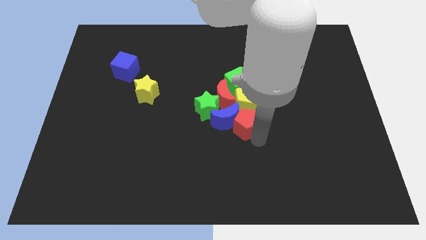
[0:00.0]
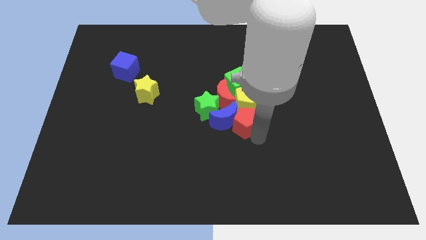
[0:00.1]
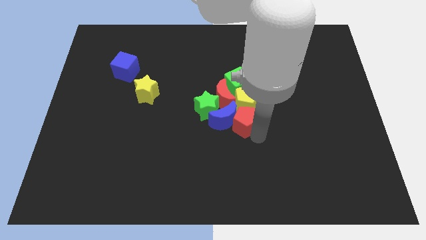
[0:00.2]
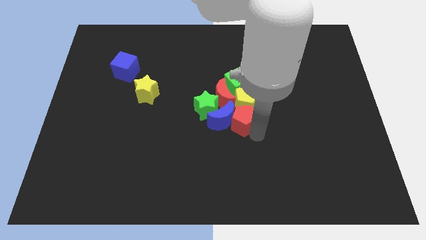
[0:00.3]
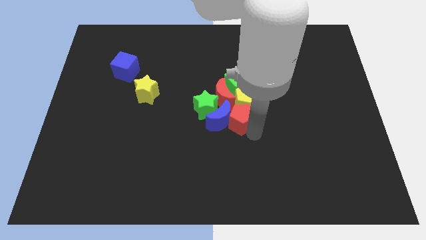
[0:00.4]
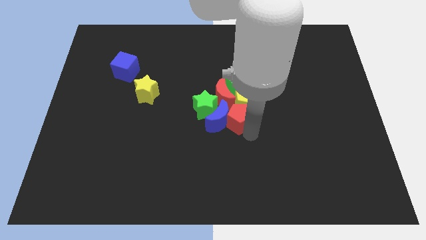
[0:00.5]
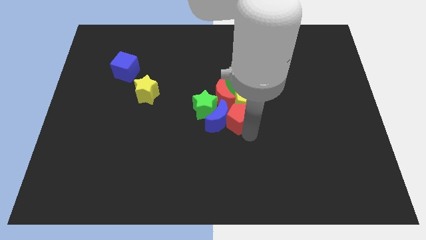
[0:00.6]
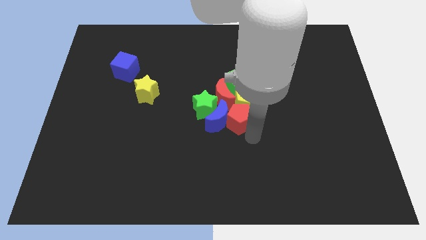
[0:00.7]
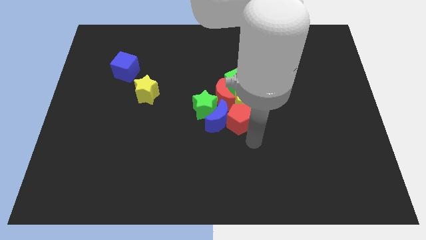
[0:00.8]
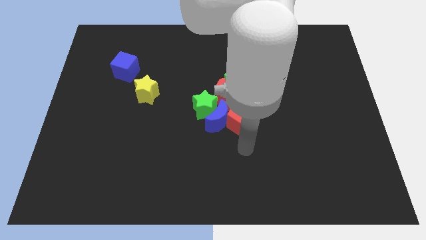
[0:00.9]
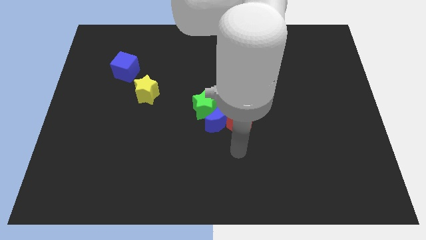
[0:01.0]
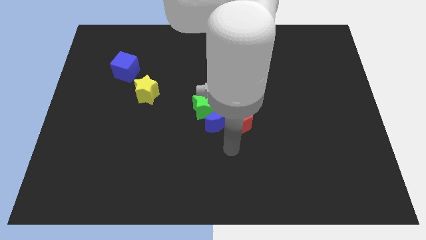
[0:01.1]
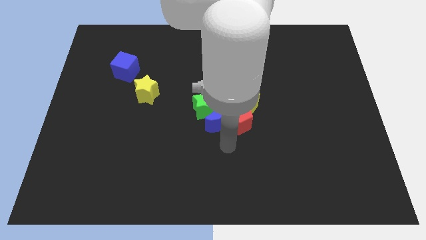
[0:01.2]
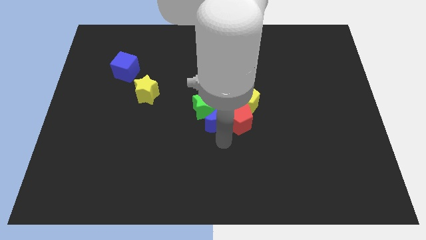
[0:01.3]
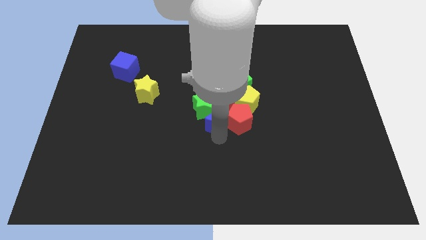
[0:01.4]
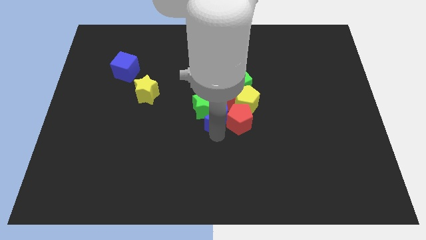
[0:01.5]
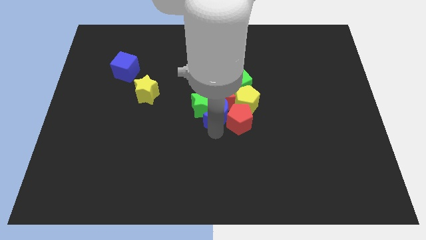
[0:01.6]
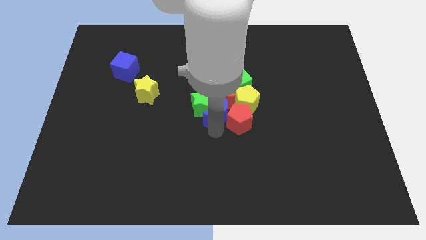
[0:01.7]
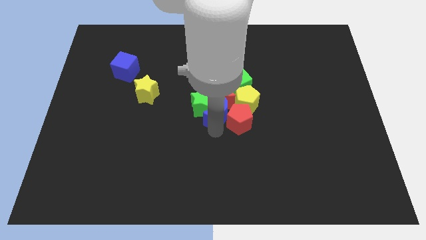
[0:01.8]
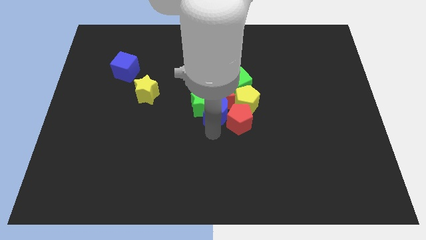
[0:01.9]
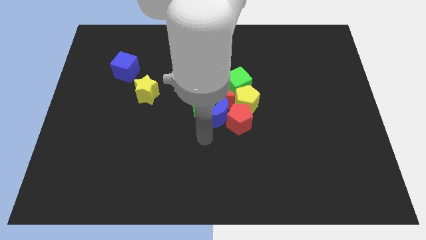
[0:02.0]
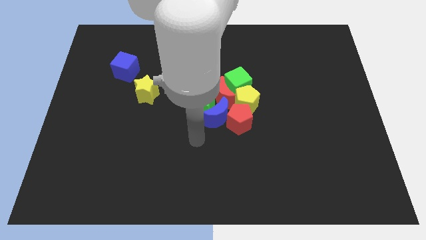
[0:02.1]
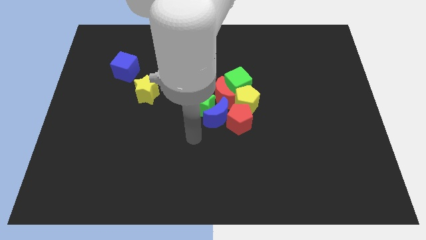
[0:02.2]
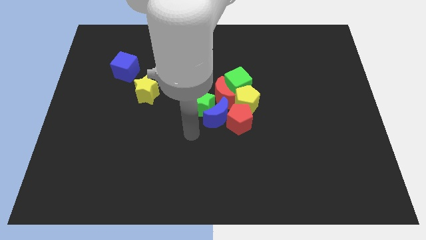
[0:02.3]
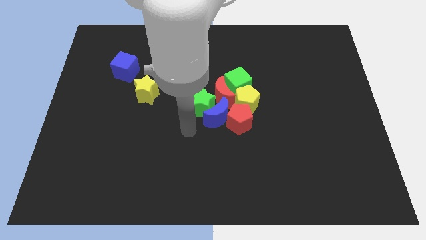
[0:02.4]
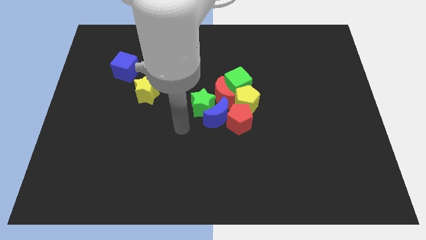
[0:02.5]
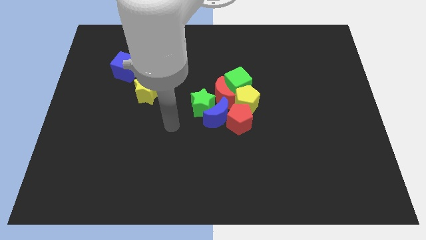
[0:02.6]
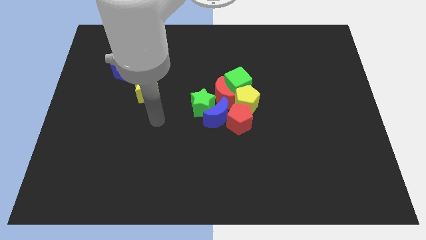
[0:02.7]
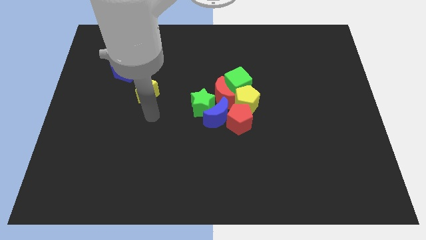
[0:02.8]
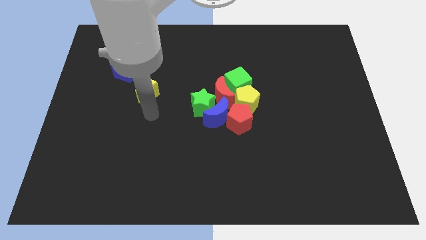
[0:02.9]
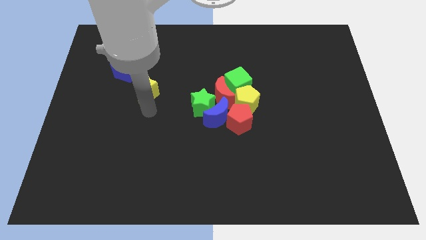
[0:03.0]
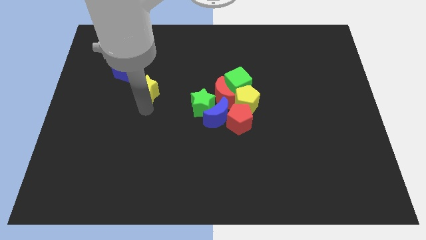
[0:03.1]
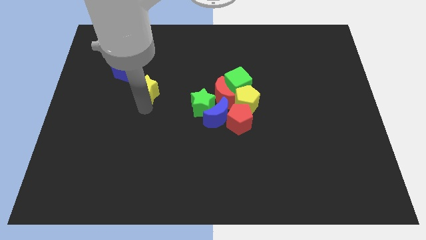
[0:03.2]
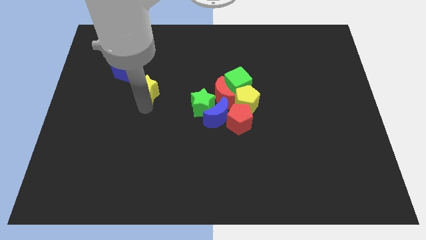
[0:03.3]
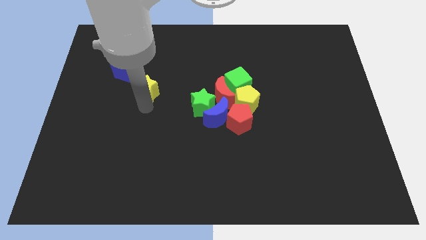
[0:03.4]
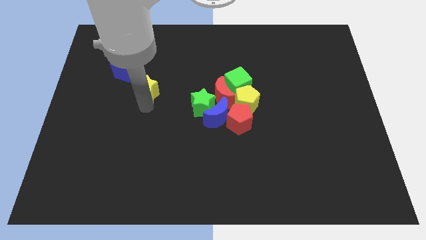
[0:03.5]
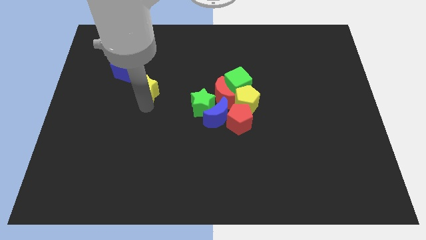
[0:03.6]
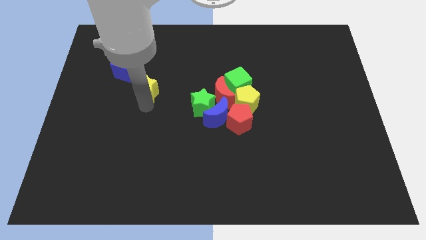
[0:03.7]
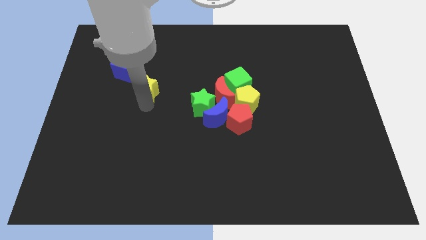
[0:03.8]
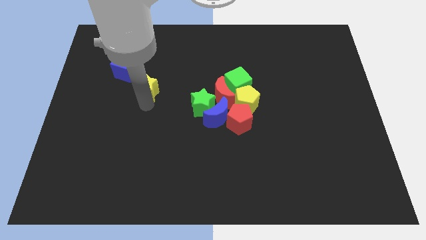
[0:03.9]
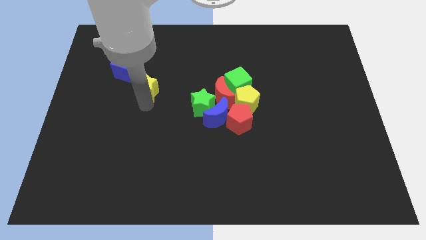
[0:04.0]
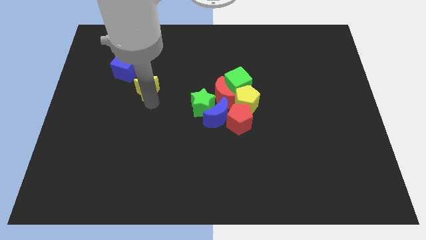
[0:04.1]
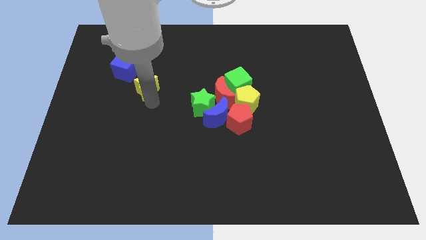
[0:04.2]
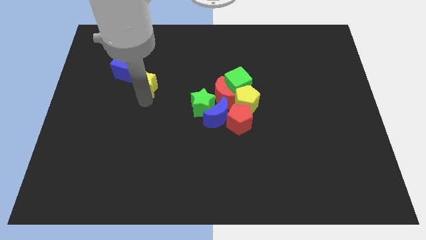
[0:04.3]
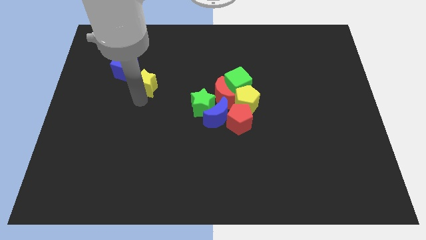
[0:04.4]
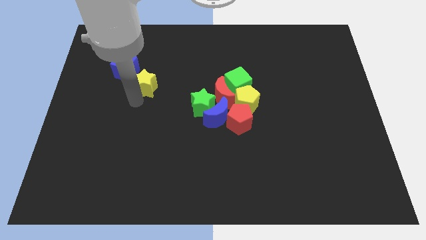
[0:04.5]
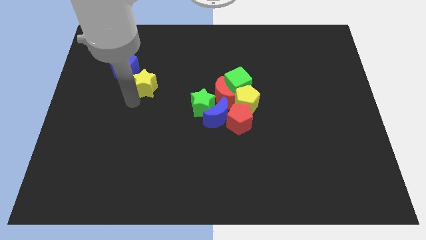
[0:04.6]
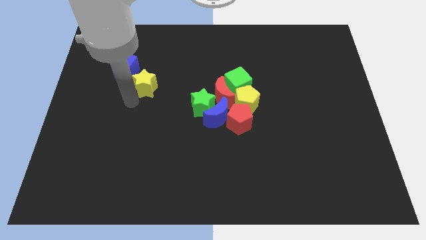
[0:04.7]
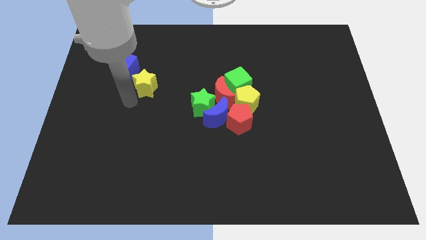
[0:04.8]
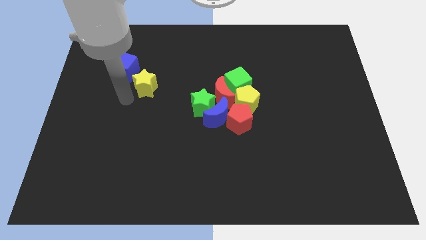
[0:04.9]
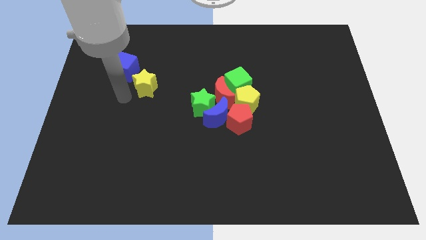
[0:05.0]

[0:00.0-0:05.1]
slightly move the yellow star to the bottom right side of blue cube

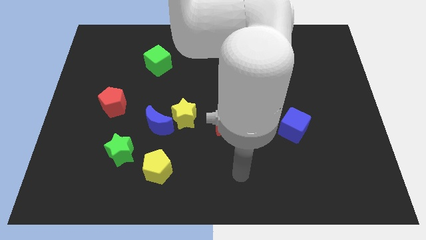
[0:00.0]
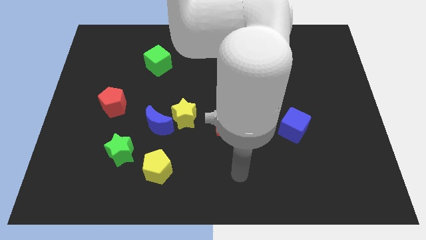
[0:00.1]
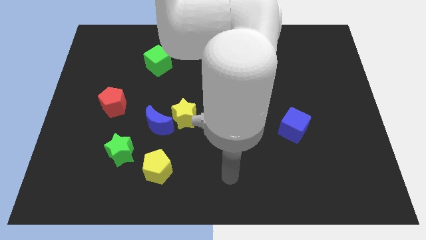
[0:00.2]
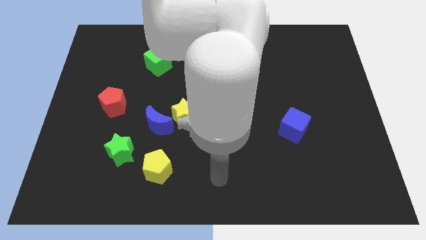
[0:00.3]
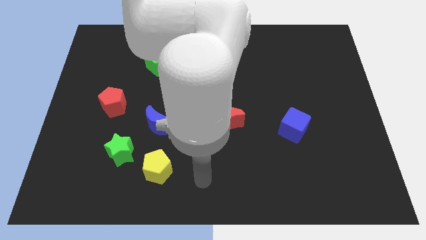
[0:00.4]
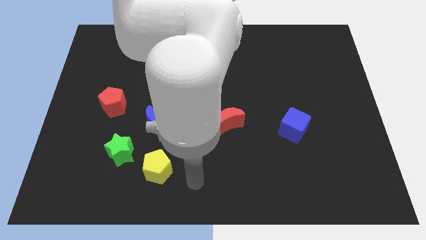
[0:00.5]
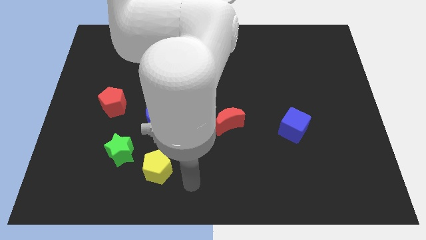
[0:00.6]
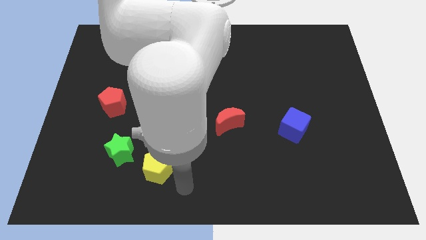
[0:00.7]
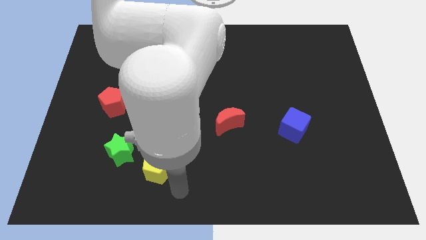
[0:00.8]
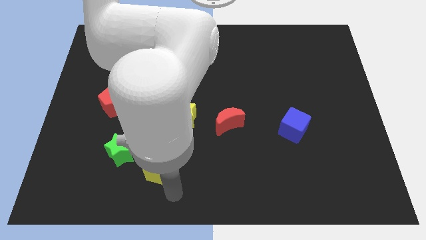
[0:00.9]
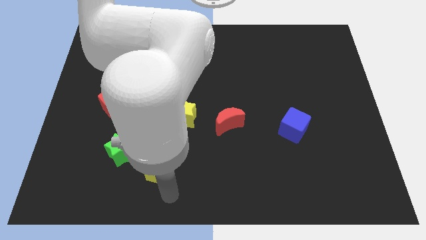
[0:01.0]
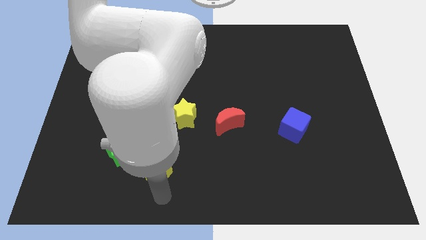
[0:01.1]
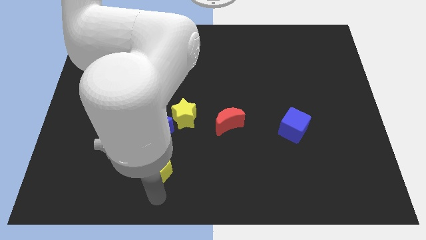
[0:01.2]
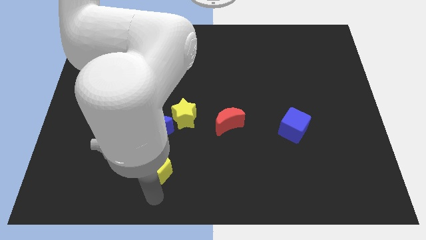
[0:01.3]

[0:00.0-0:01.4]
move your arm to the bottom of the yellow pentagon

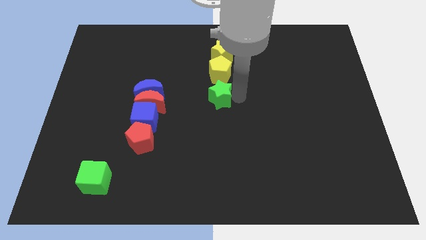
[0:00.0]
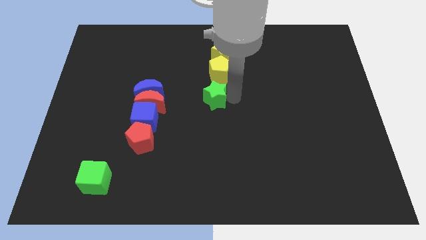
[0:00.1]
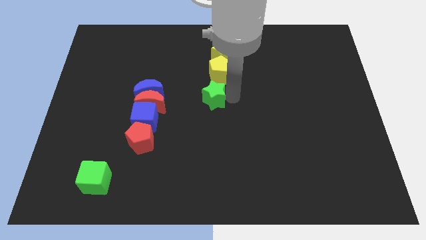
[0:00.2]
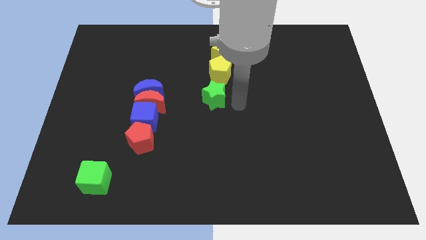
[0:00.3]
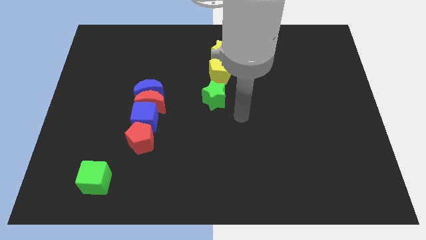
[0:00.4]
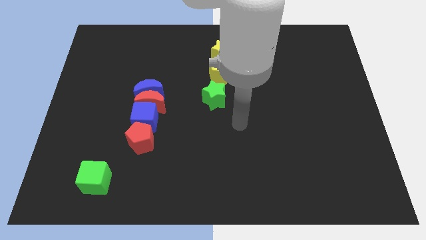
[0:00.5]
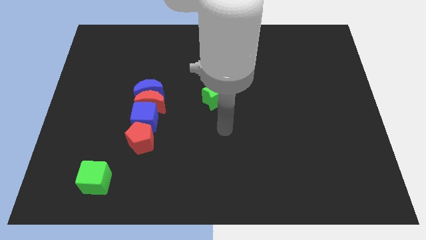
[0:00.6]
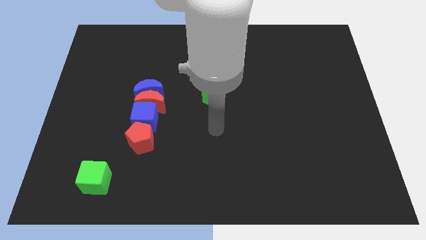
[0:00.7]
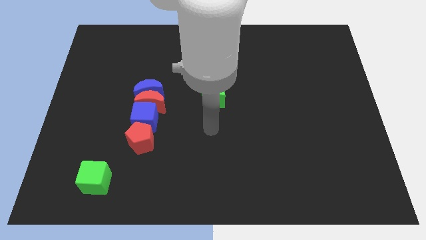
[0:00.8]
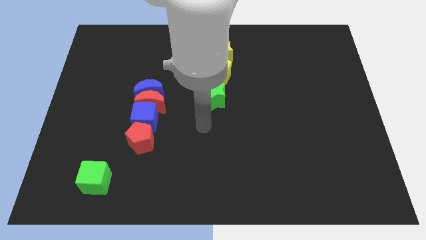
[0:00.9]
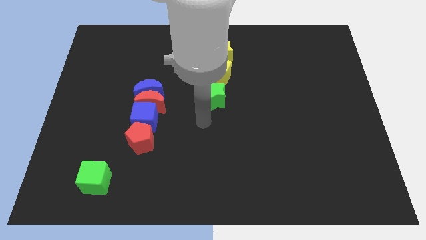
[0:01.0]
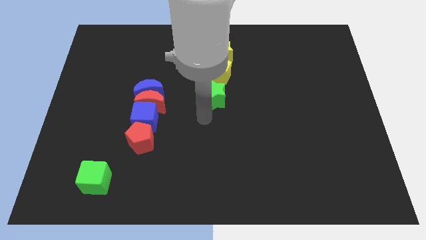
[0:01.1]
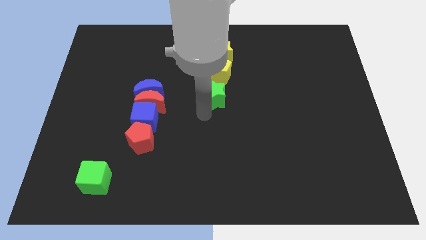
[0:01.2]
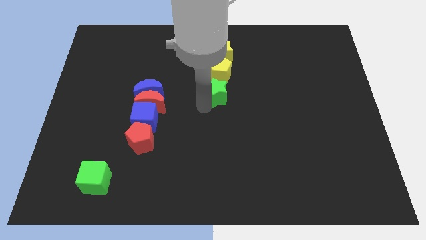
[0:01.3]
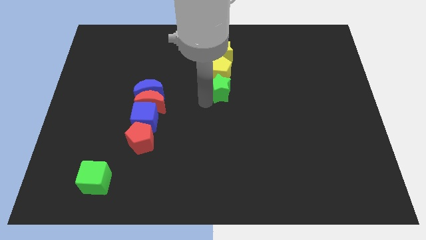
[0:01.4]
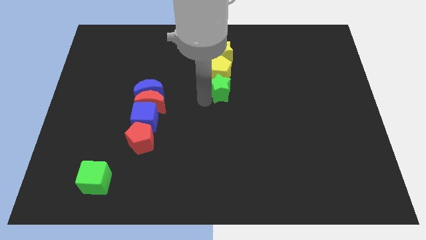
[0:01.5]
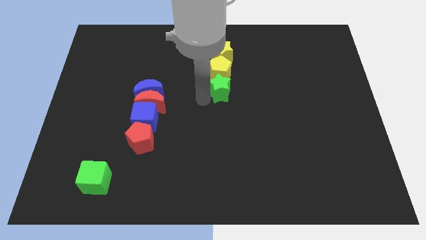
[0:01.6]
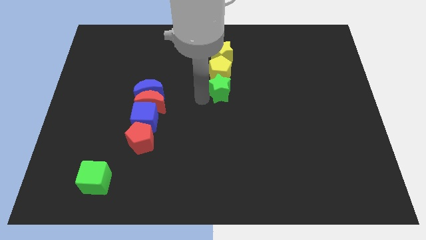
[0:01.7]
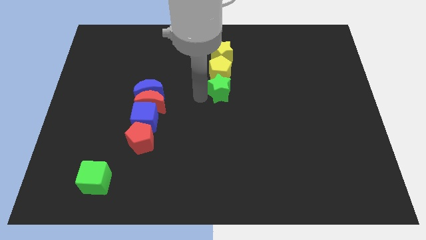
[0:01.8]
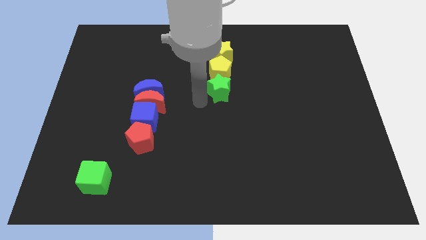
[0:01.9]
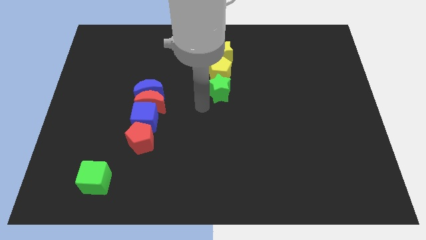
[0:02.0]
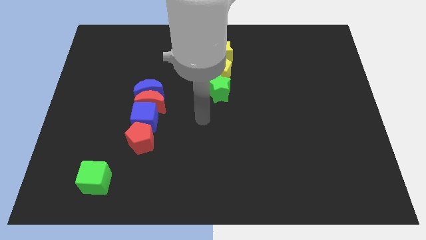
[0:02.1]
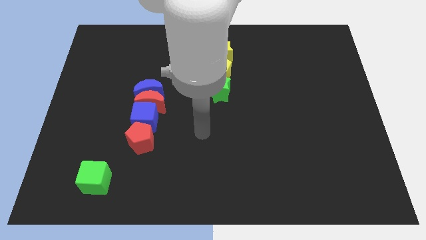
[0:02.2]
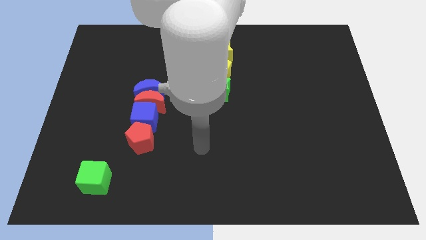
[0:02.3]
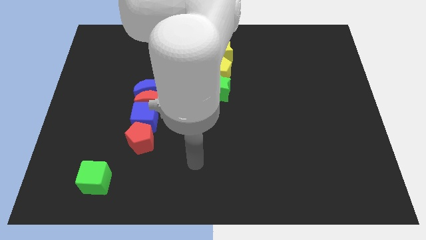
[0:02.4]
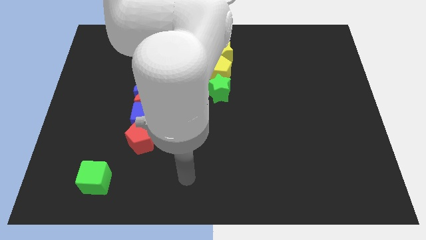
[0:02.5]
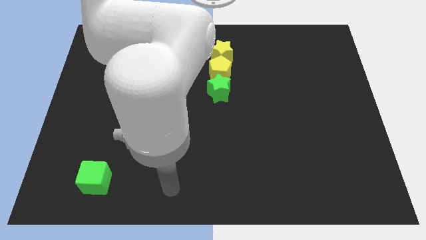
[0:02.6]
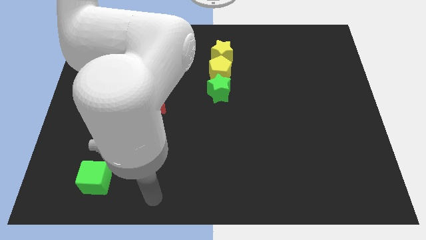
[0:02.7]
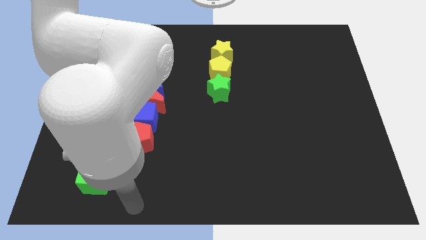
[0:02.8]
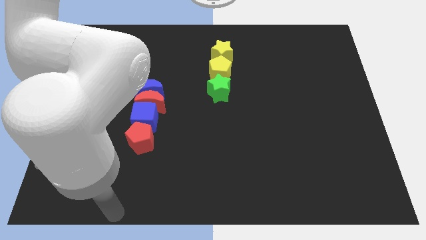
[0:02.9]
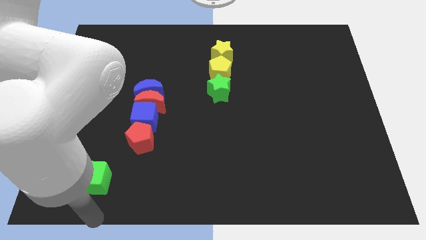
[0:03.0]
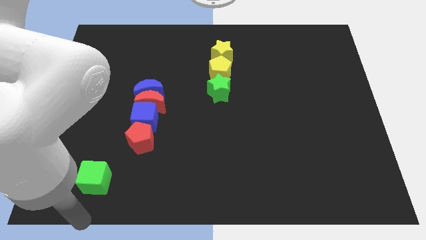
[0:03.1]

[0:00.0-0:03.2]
place the arm at the bottom of the green cube
